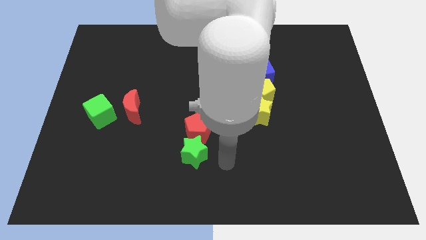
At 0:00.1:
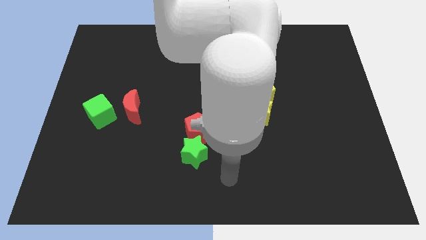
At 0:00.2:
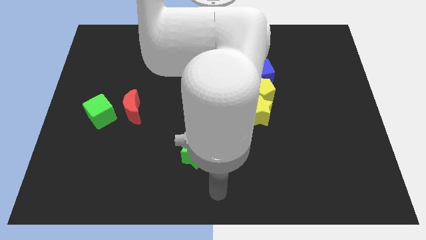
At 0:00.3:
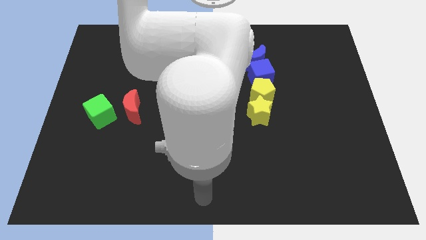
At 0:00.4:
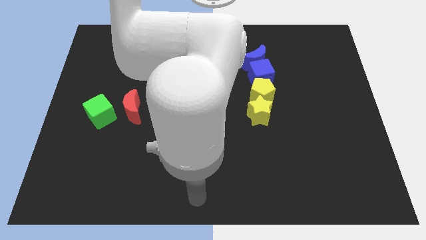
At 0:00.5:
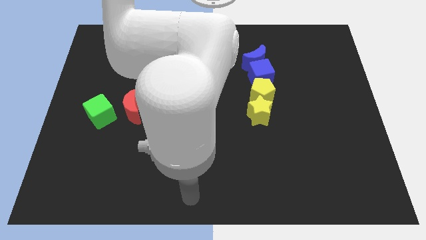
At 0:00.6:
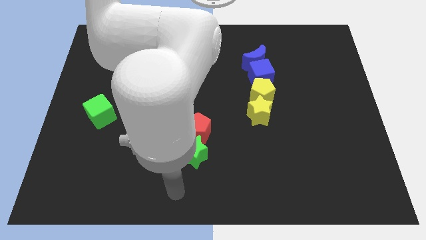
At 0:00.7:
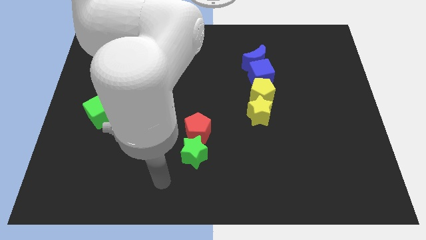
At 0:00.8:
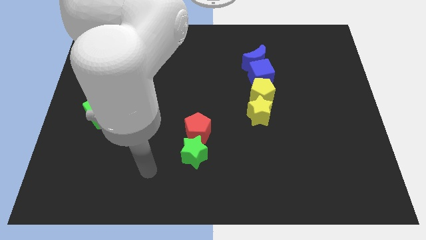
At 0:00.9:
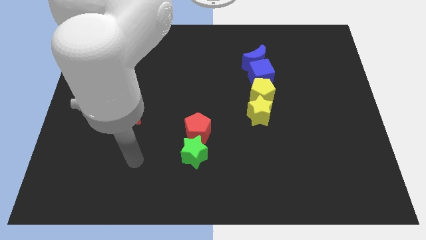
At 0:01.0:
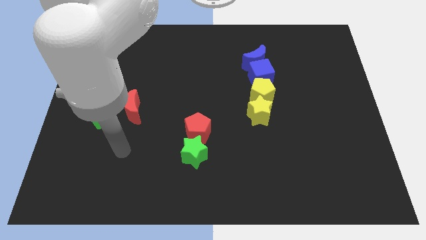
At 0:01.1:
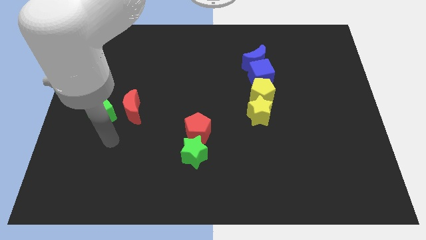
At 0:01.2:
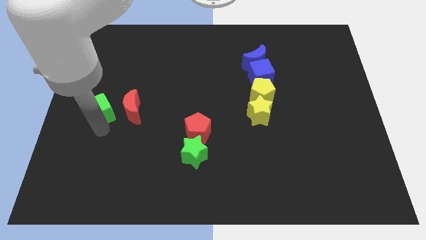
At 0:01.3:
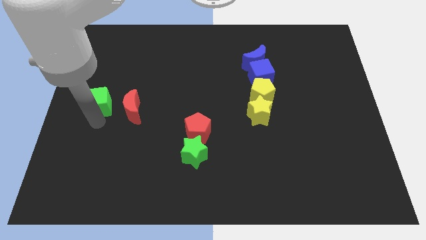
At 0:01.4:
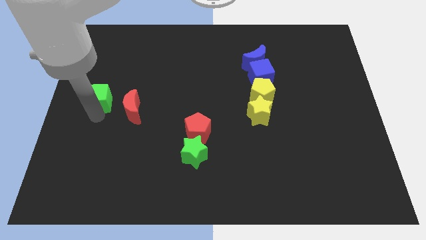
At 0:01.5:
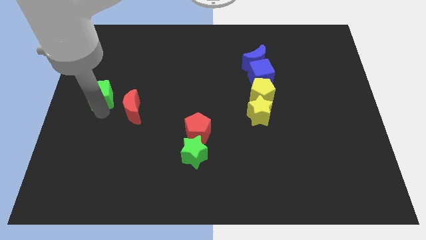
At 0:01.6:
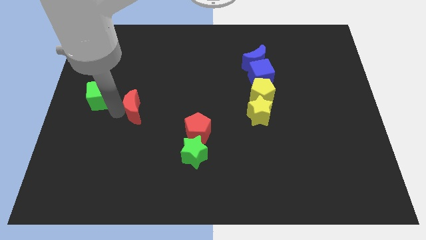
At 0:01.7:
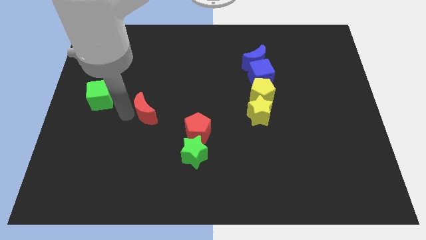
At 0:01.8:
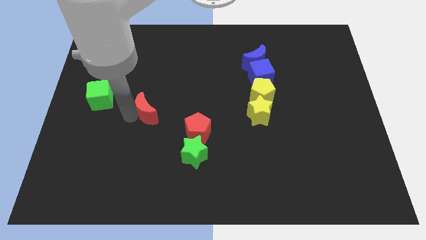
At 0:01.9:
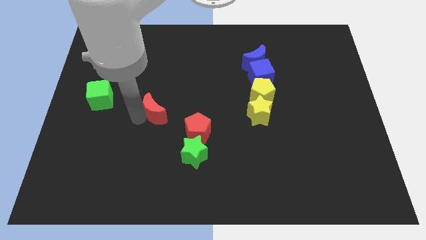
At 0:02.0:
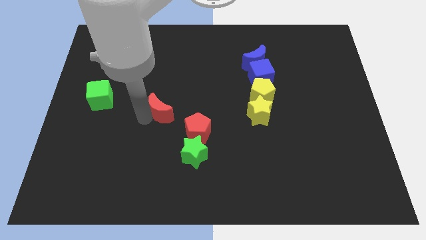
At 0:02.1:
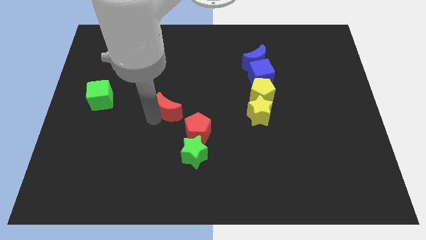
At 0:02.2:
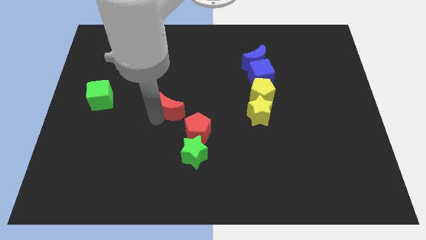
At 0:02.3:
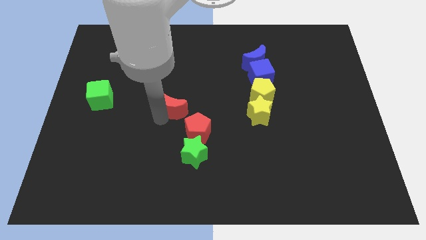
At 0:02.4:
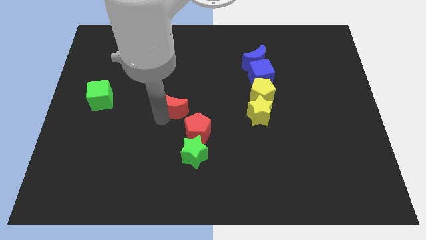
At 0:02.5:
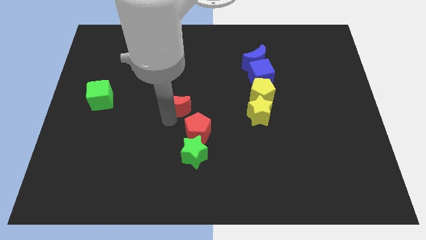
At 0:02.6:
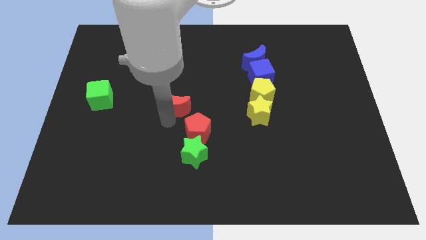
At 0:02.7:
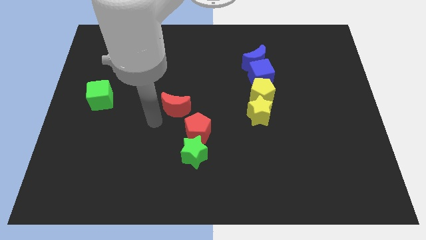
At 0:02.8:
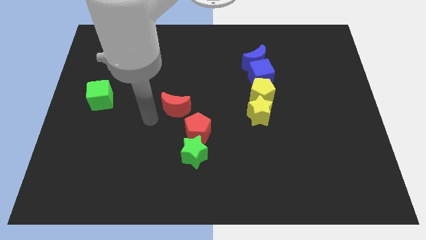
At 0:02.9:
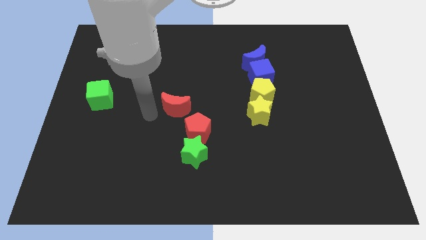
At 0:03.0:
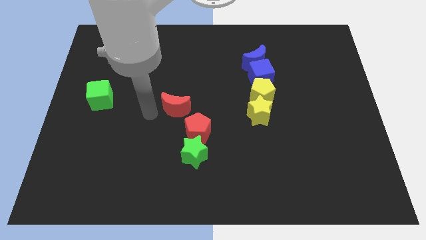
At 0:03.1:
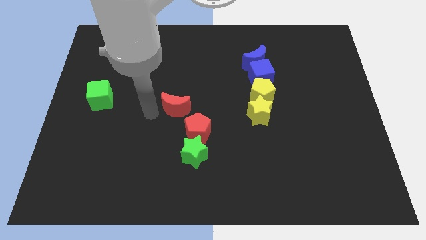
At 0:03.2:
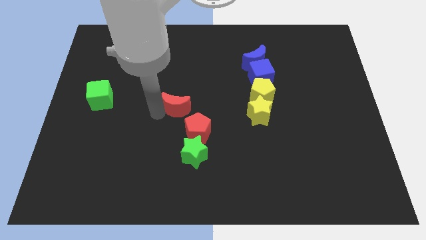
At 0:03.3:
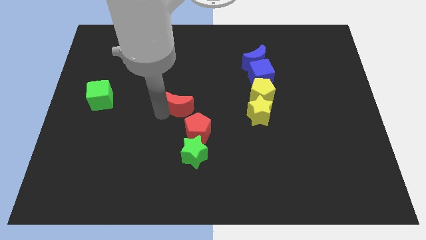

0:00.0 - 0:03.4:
slide the red crescent to the right side of the green cube

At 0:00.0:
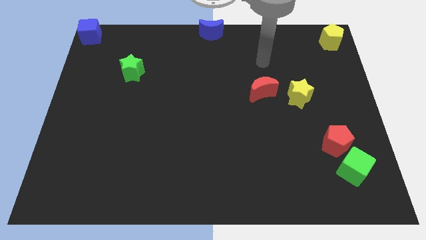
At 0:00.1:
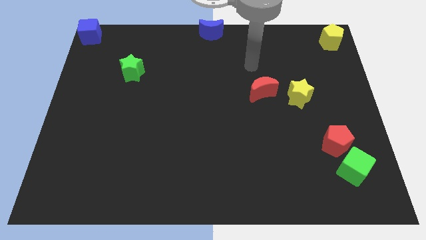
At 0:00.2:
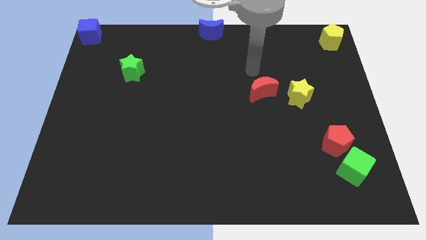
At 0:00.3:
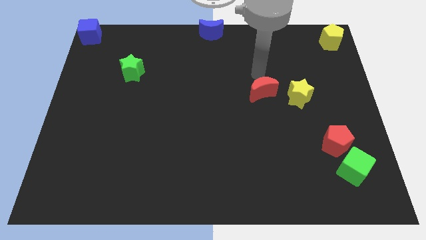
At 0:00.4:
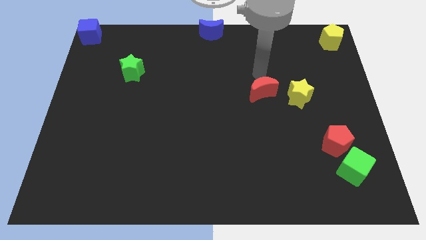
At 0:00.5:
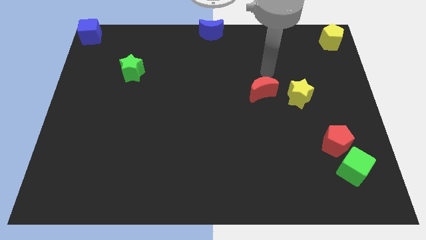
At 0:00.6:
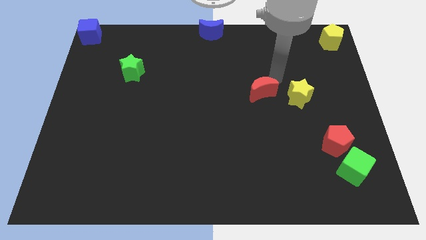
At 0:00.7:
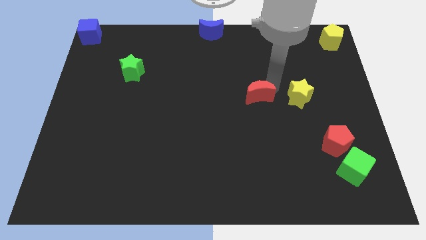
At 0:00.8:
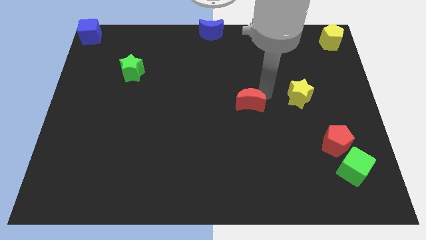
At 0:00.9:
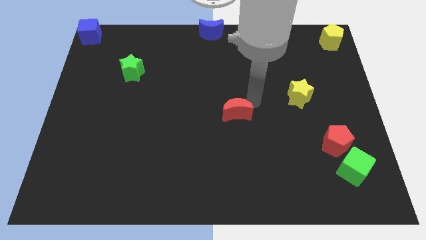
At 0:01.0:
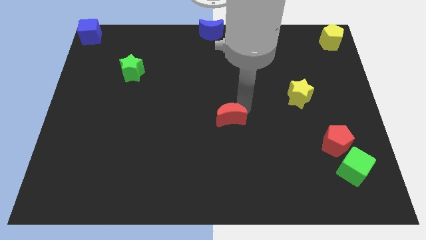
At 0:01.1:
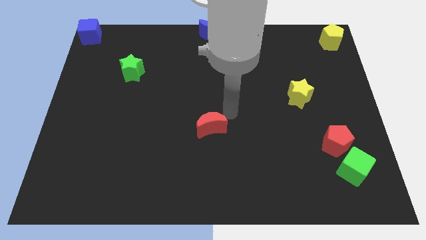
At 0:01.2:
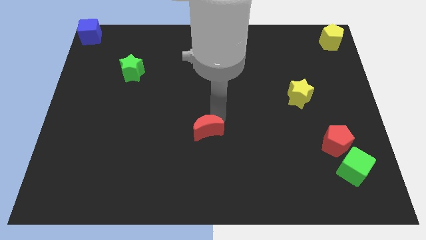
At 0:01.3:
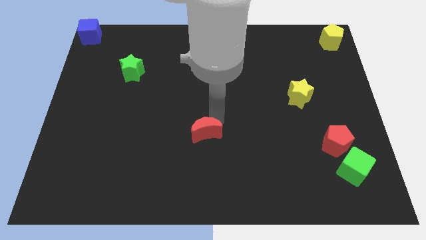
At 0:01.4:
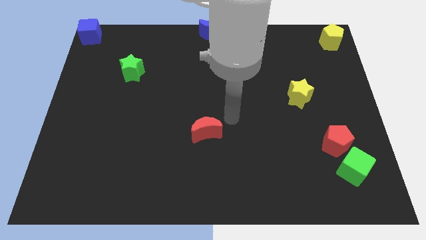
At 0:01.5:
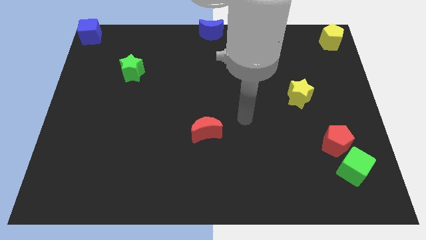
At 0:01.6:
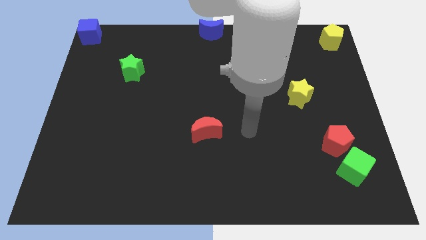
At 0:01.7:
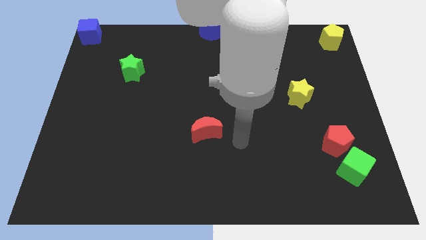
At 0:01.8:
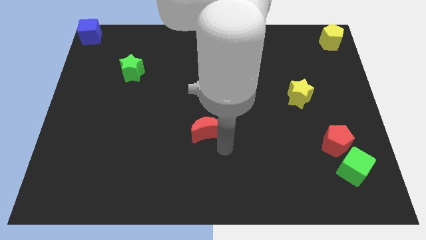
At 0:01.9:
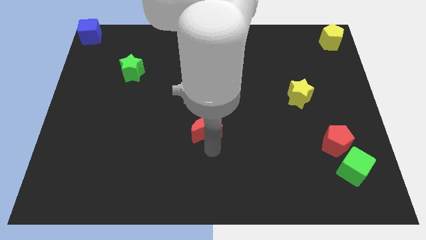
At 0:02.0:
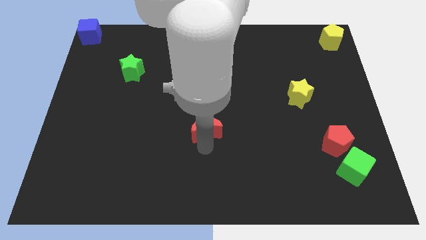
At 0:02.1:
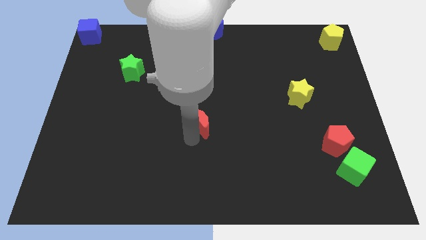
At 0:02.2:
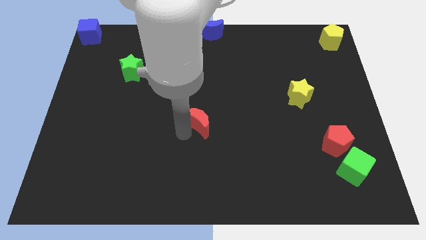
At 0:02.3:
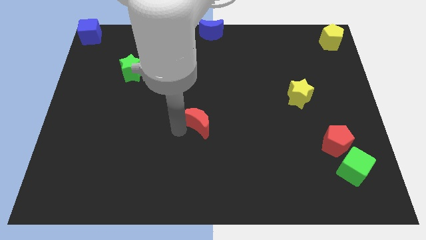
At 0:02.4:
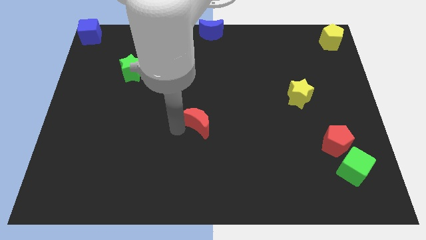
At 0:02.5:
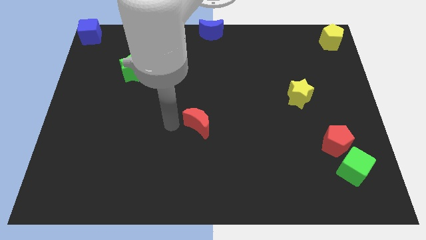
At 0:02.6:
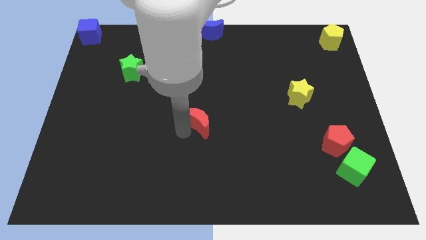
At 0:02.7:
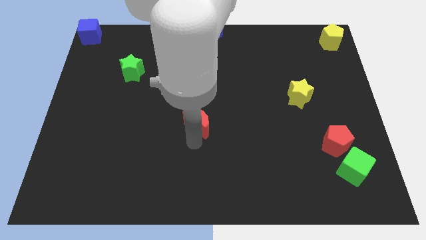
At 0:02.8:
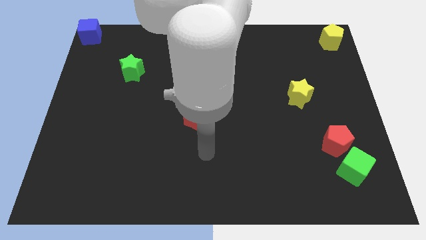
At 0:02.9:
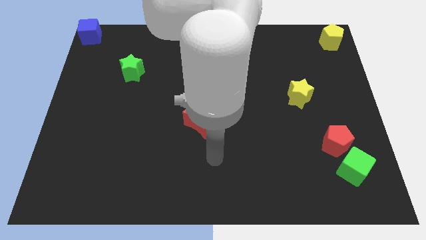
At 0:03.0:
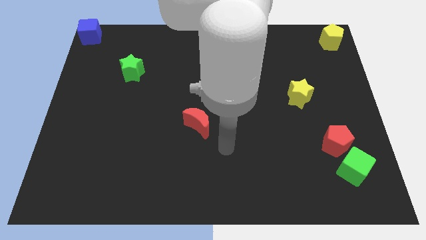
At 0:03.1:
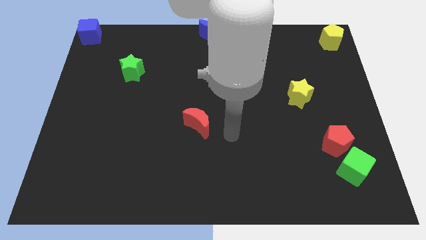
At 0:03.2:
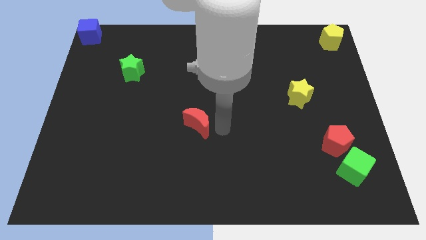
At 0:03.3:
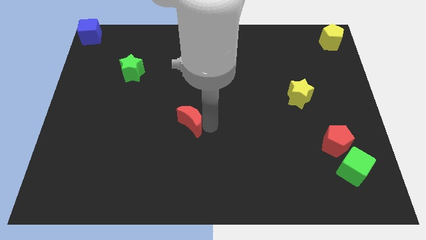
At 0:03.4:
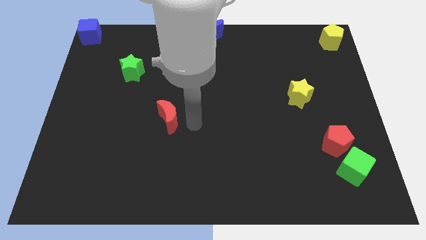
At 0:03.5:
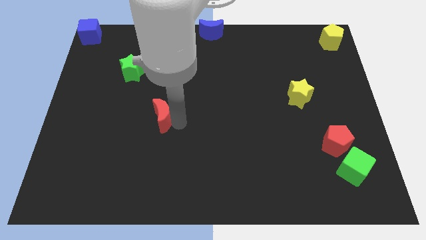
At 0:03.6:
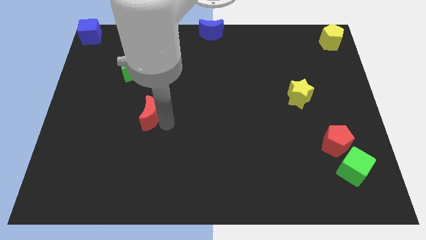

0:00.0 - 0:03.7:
slide the red moon to the center left

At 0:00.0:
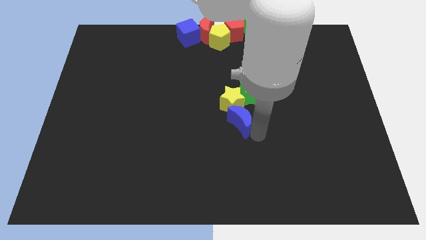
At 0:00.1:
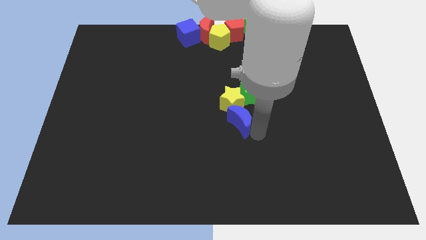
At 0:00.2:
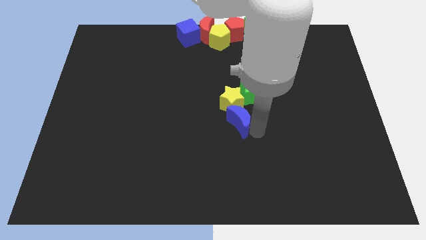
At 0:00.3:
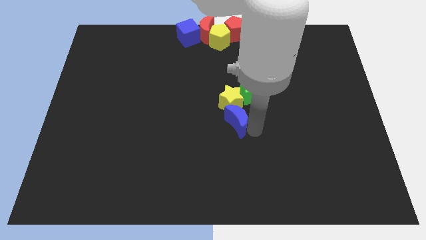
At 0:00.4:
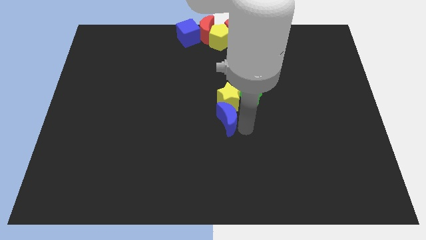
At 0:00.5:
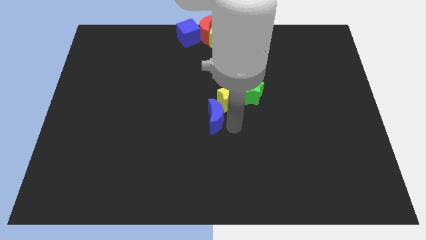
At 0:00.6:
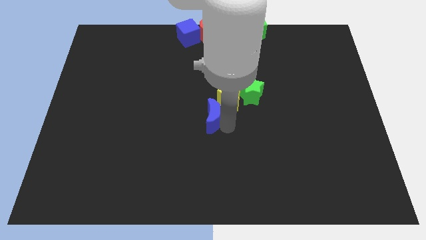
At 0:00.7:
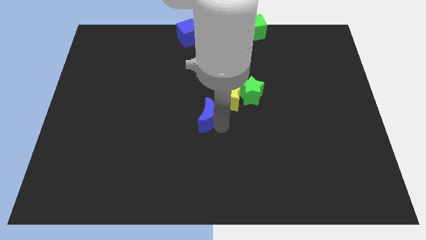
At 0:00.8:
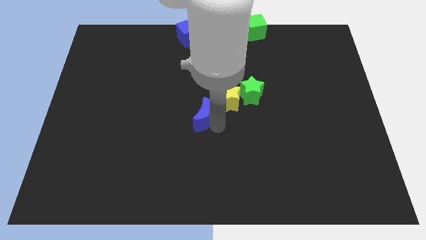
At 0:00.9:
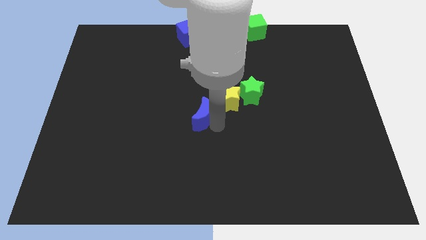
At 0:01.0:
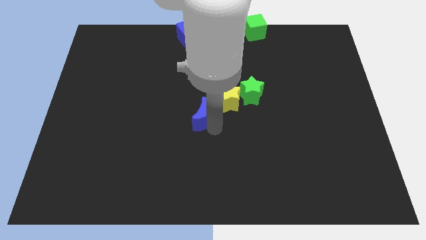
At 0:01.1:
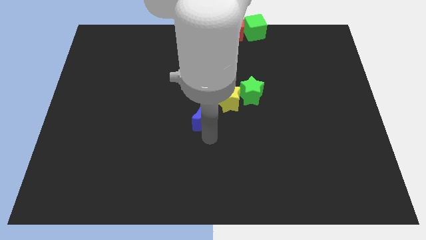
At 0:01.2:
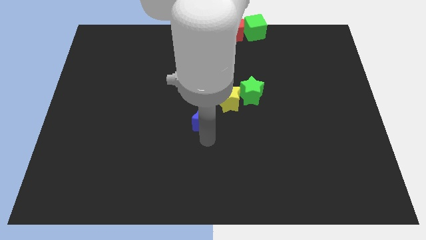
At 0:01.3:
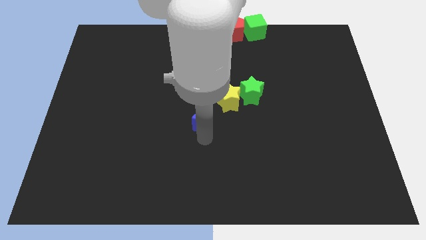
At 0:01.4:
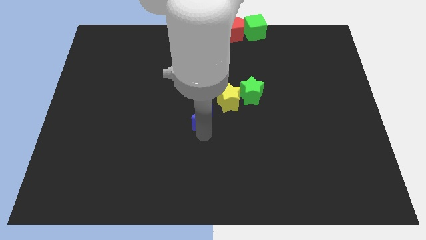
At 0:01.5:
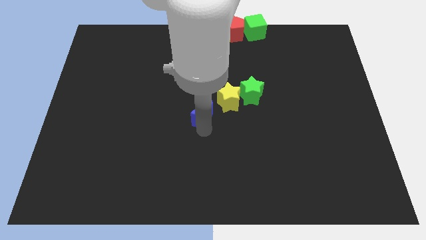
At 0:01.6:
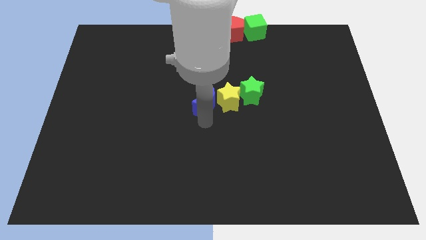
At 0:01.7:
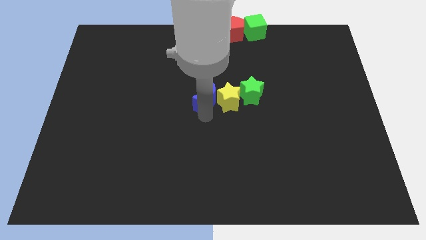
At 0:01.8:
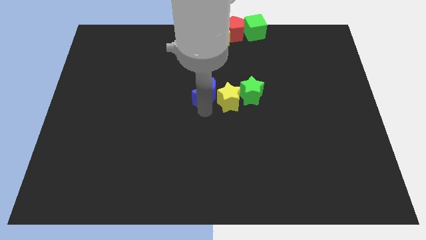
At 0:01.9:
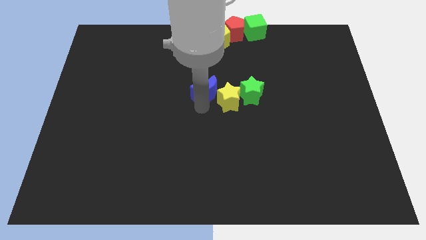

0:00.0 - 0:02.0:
move the blue crescent left to the yellow star
